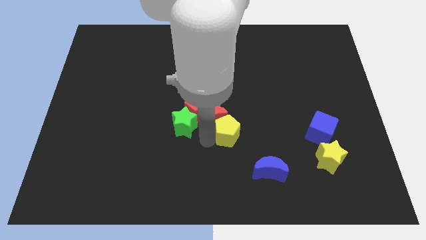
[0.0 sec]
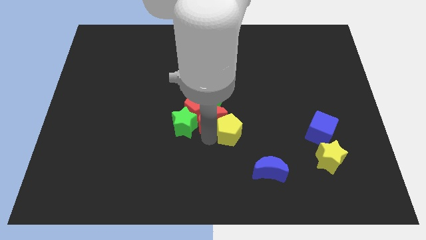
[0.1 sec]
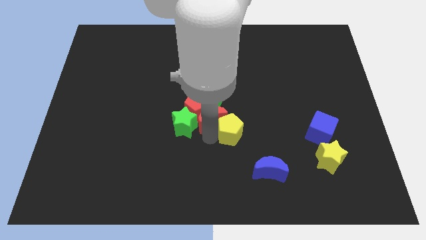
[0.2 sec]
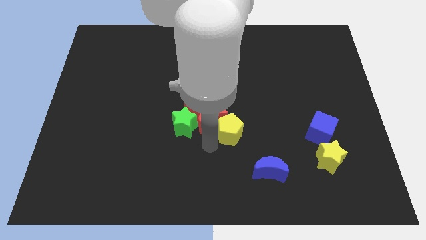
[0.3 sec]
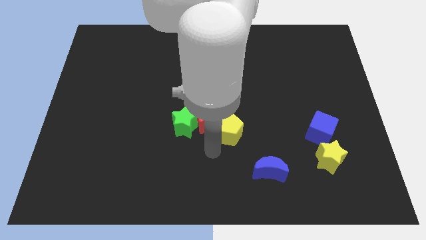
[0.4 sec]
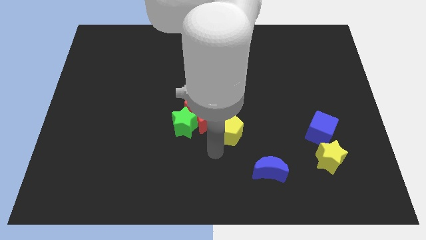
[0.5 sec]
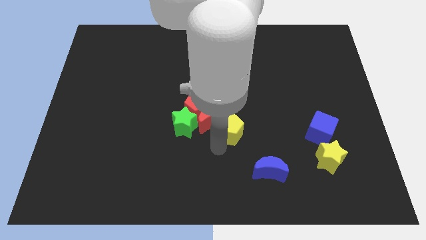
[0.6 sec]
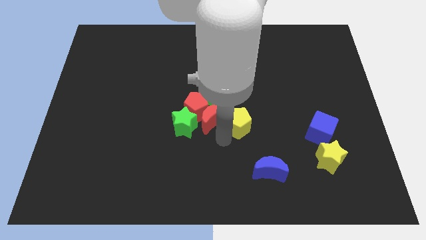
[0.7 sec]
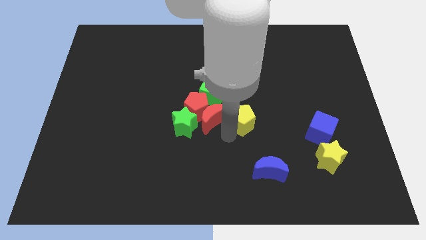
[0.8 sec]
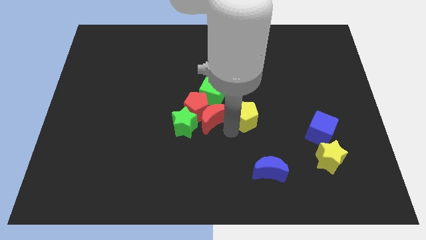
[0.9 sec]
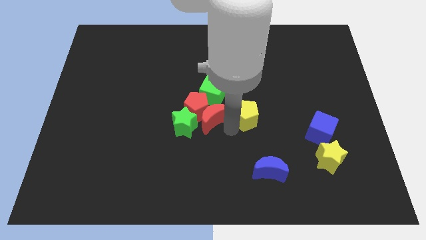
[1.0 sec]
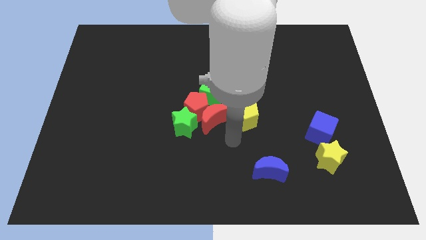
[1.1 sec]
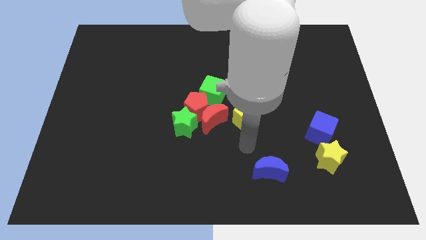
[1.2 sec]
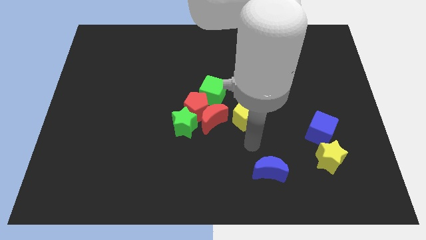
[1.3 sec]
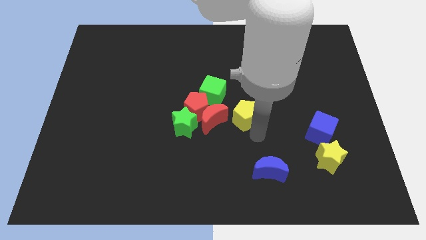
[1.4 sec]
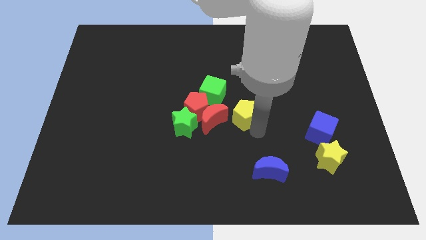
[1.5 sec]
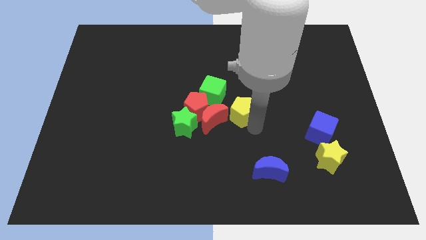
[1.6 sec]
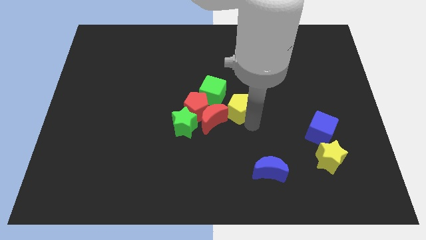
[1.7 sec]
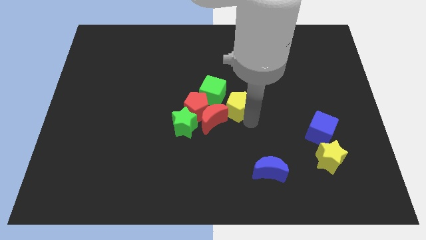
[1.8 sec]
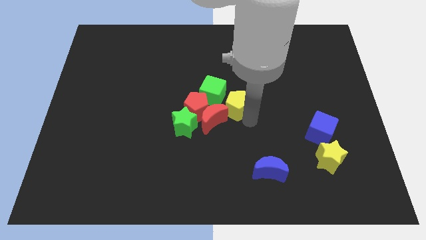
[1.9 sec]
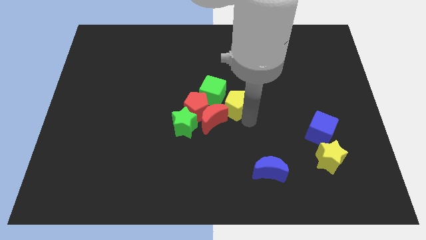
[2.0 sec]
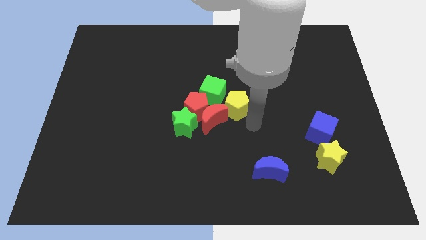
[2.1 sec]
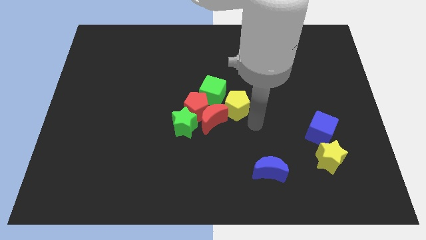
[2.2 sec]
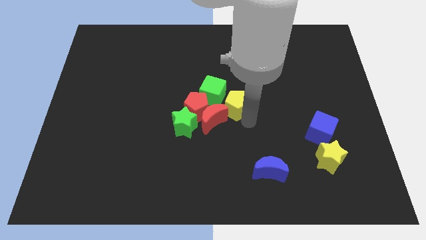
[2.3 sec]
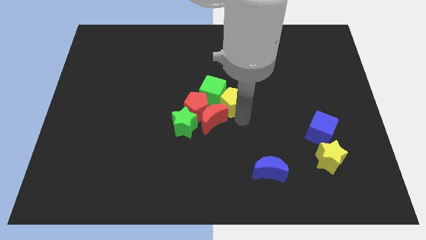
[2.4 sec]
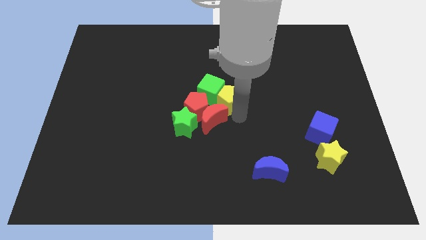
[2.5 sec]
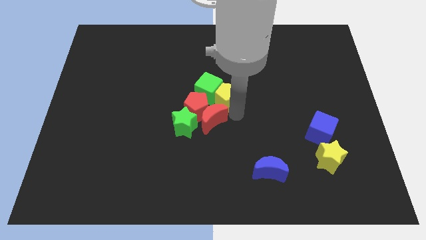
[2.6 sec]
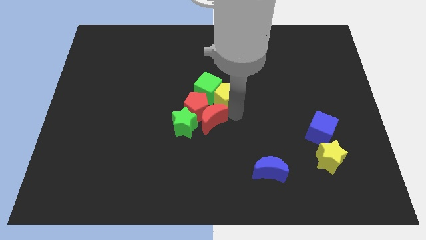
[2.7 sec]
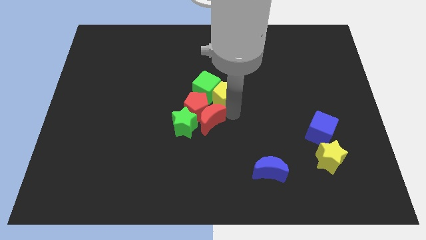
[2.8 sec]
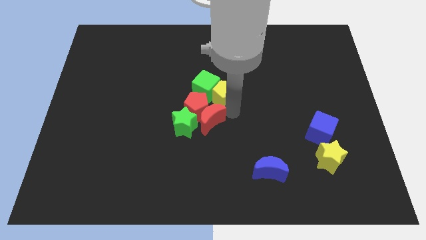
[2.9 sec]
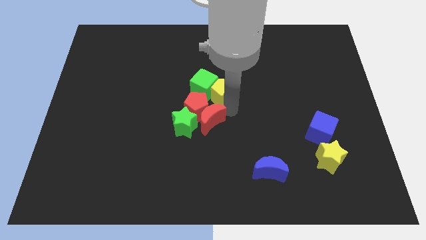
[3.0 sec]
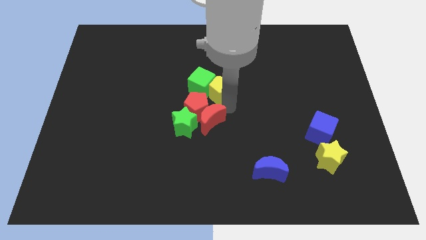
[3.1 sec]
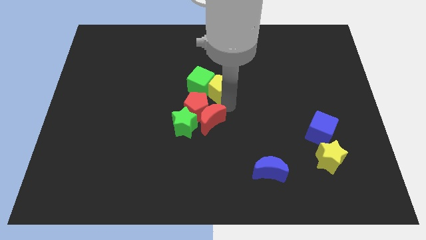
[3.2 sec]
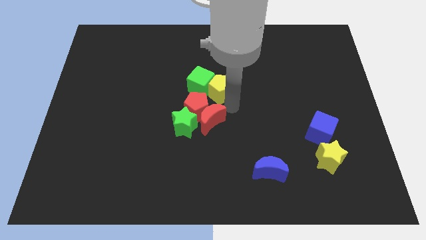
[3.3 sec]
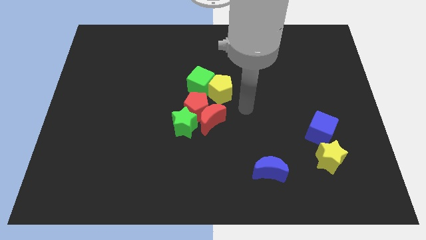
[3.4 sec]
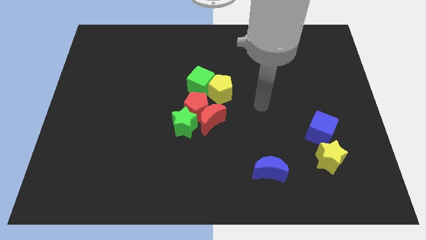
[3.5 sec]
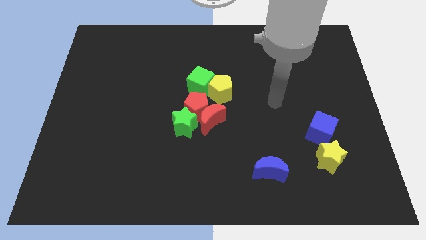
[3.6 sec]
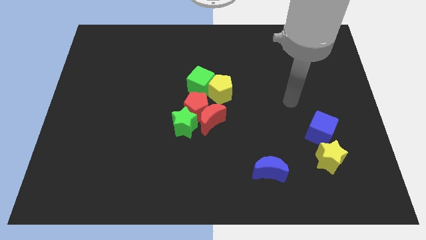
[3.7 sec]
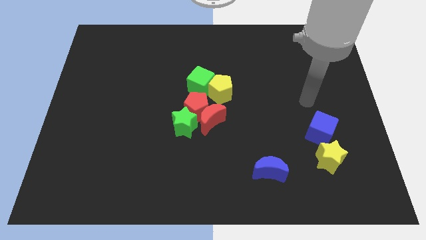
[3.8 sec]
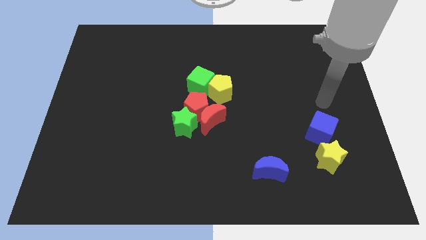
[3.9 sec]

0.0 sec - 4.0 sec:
move the yellow petagon to the right side of the green cube

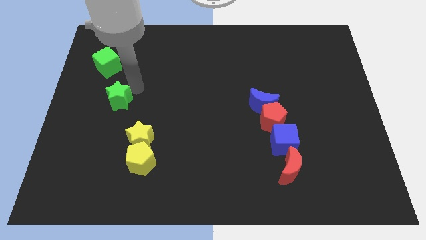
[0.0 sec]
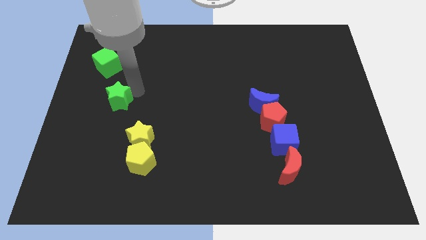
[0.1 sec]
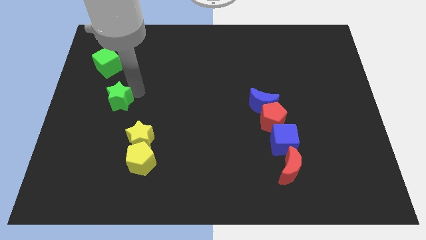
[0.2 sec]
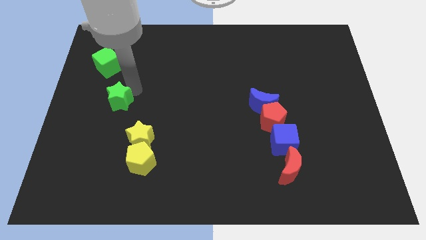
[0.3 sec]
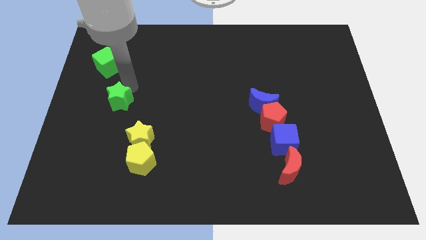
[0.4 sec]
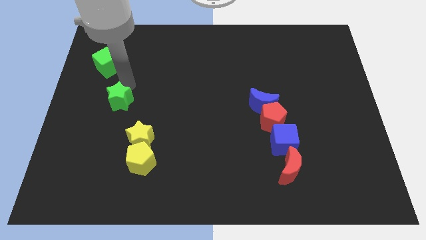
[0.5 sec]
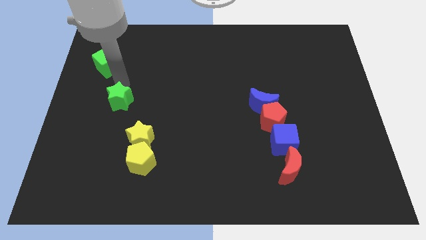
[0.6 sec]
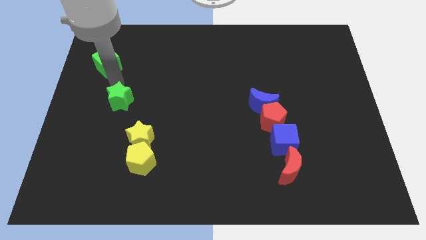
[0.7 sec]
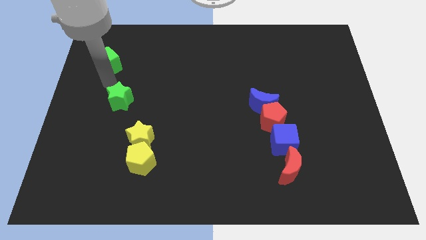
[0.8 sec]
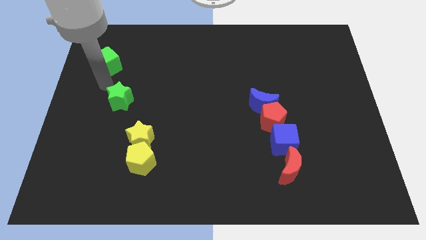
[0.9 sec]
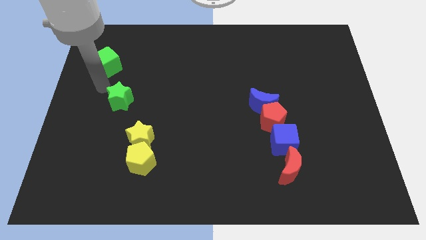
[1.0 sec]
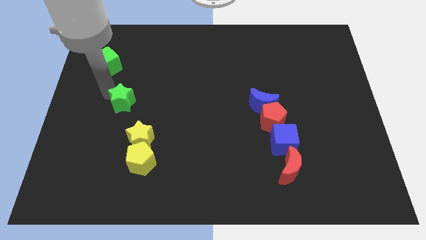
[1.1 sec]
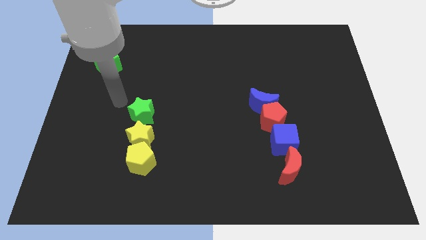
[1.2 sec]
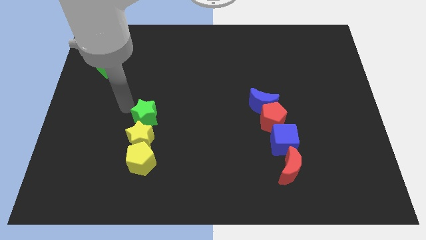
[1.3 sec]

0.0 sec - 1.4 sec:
slide the green star to the top side of the yellow star

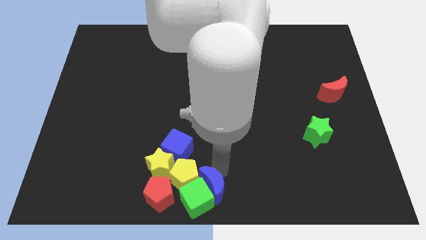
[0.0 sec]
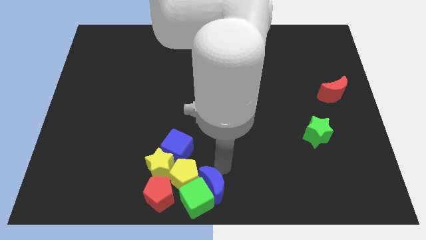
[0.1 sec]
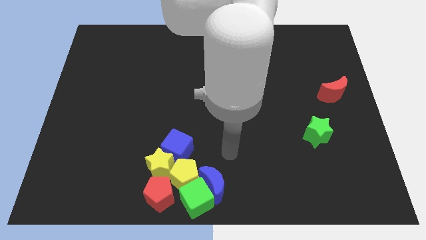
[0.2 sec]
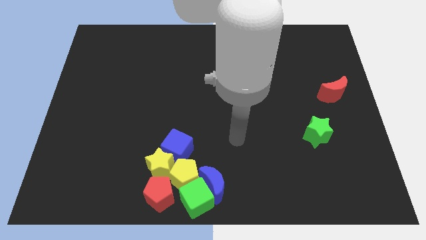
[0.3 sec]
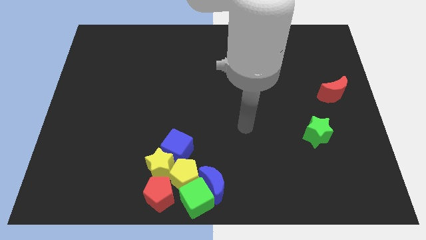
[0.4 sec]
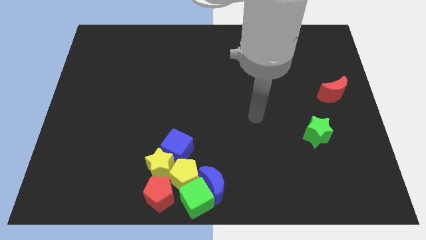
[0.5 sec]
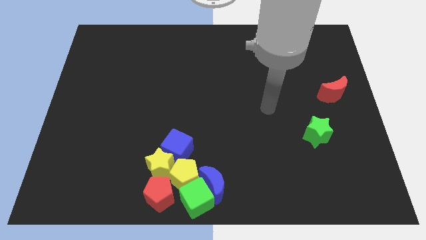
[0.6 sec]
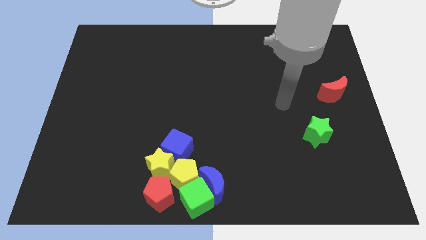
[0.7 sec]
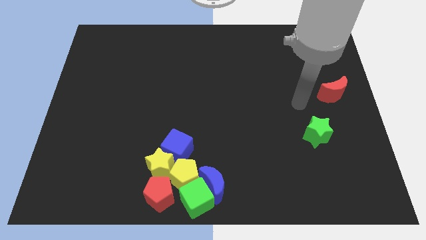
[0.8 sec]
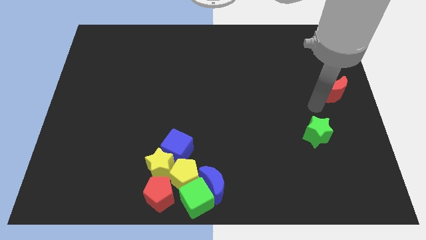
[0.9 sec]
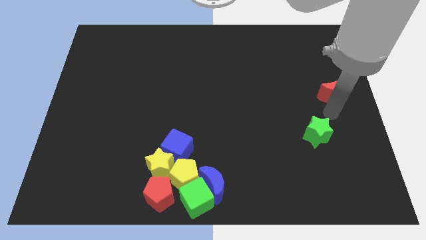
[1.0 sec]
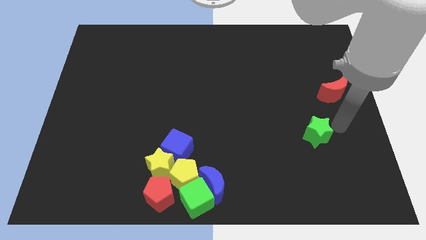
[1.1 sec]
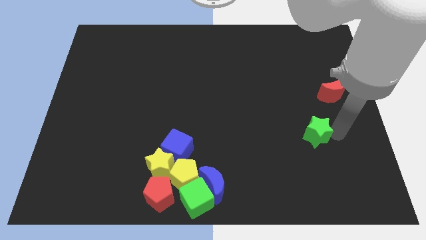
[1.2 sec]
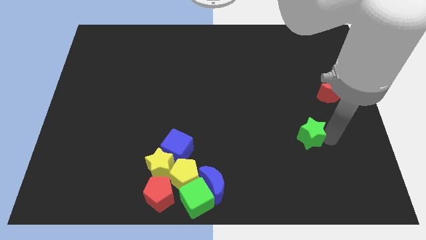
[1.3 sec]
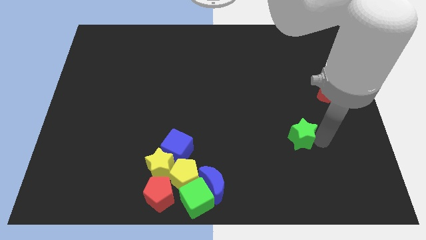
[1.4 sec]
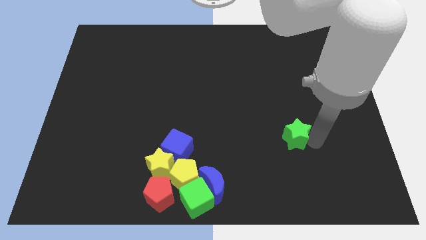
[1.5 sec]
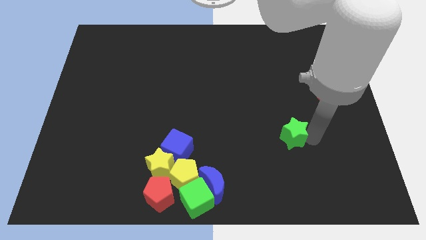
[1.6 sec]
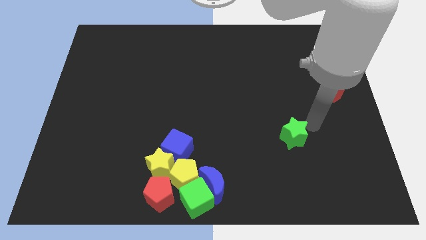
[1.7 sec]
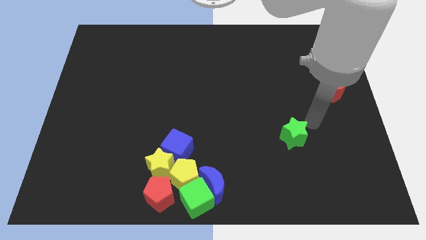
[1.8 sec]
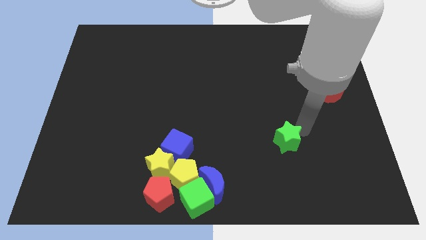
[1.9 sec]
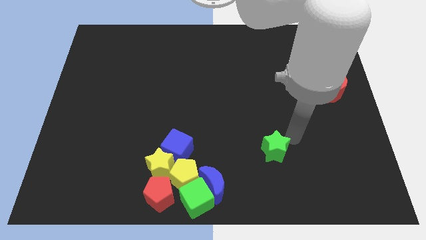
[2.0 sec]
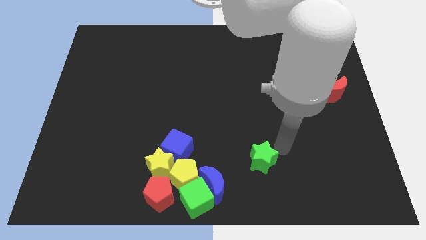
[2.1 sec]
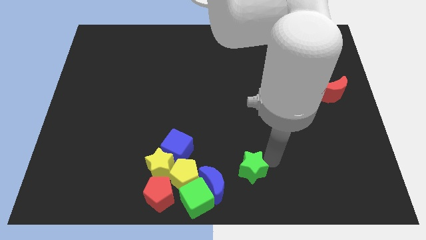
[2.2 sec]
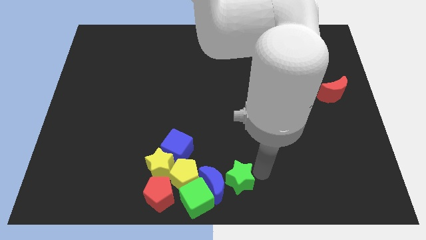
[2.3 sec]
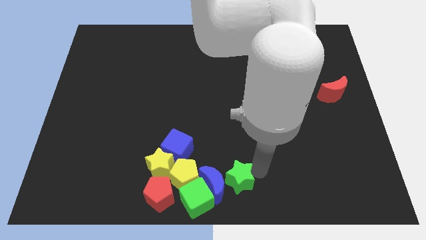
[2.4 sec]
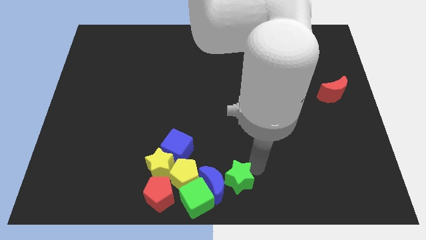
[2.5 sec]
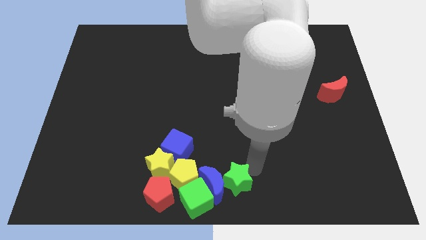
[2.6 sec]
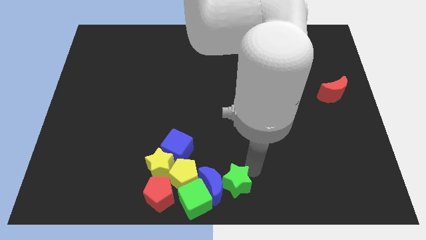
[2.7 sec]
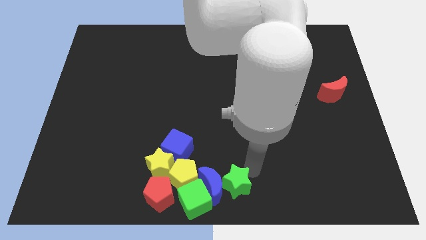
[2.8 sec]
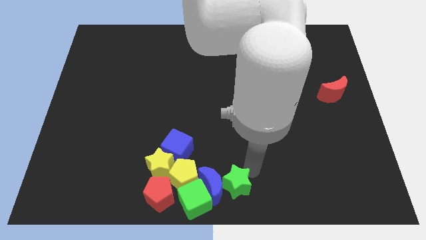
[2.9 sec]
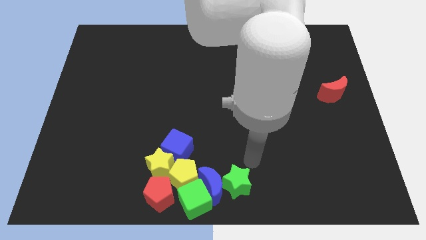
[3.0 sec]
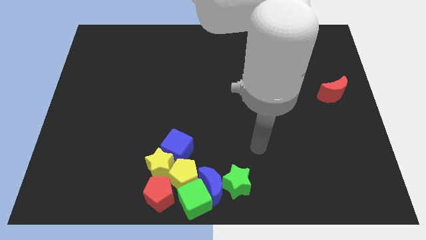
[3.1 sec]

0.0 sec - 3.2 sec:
drag green star towards group of blocks

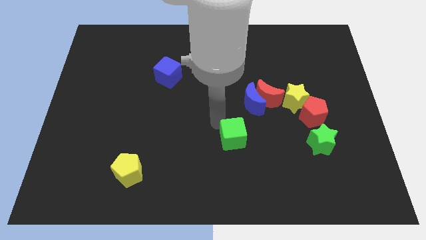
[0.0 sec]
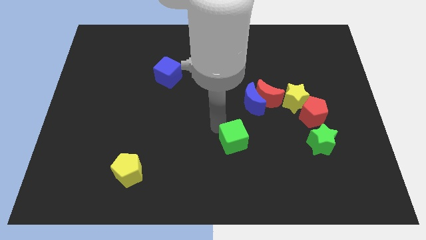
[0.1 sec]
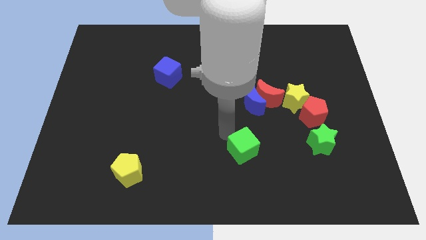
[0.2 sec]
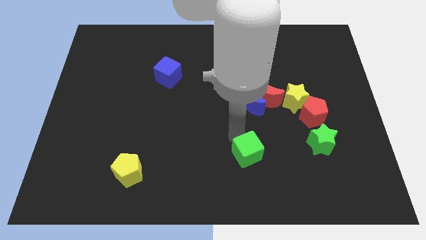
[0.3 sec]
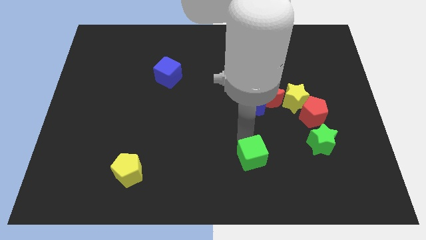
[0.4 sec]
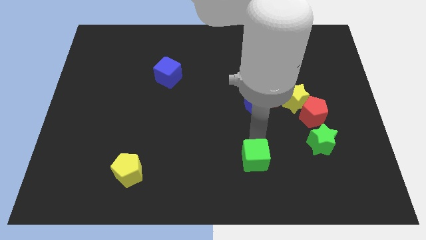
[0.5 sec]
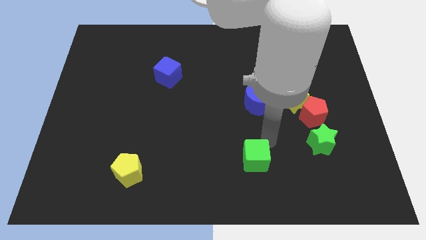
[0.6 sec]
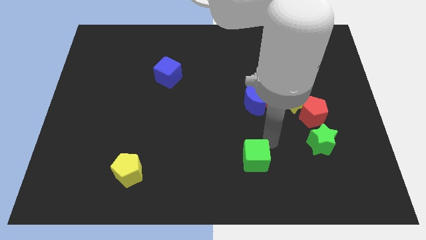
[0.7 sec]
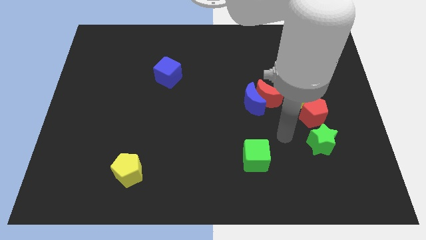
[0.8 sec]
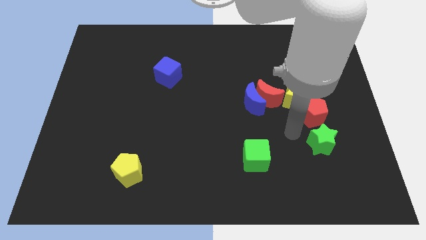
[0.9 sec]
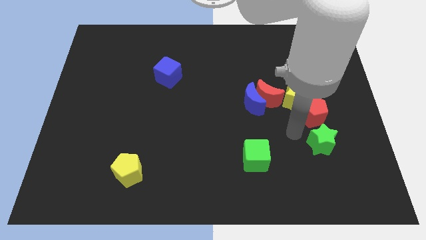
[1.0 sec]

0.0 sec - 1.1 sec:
move the green cube slightly towards the bottom
